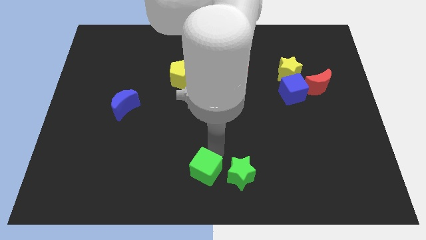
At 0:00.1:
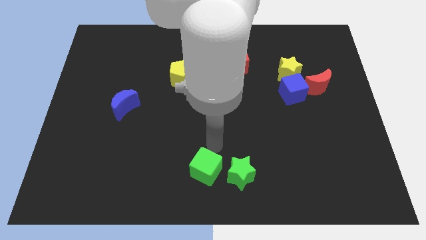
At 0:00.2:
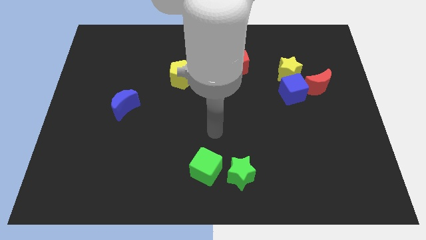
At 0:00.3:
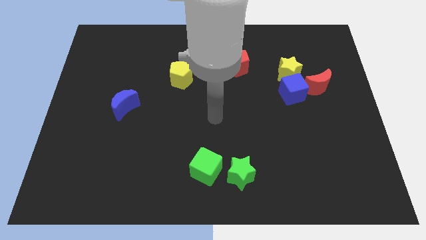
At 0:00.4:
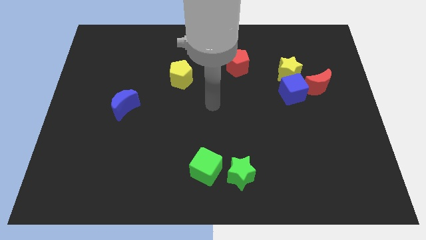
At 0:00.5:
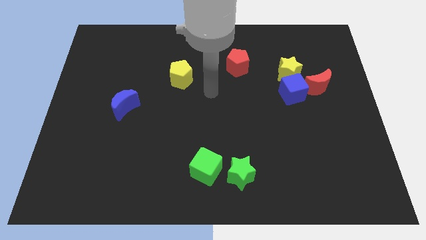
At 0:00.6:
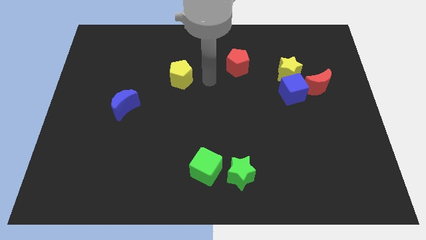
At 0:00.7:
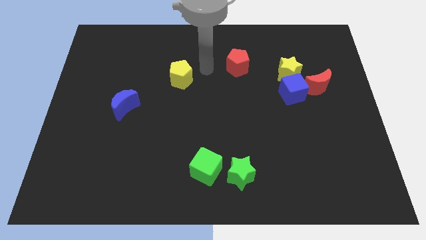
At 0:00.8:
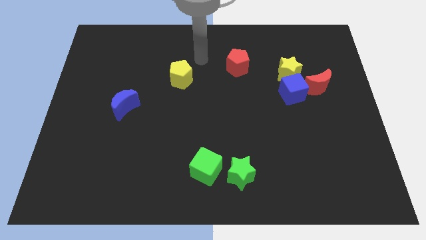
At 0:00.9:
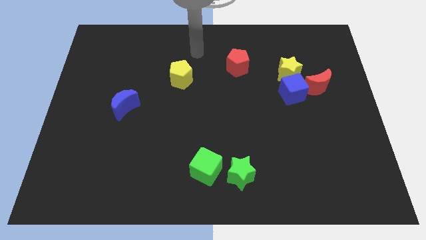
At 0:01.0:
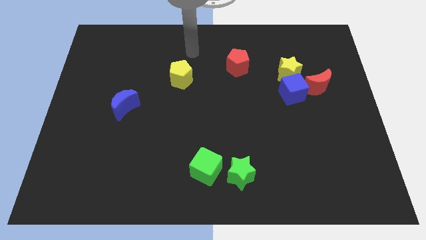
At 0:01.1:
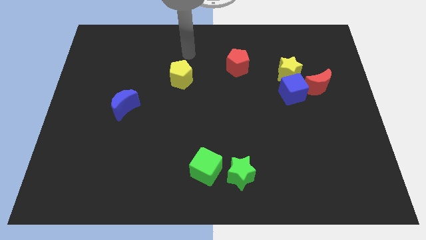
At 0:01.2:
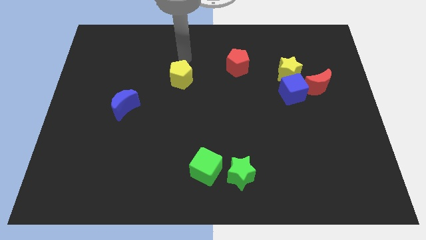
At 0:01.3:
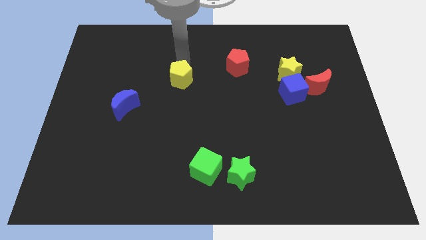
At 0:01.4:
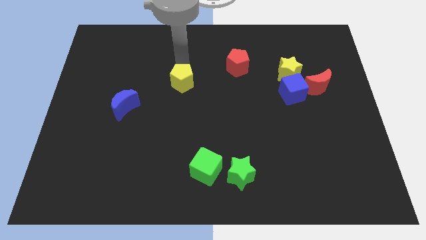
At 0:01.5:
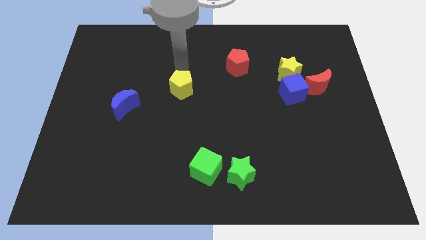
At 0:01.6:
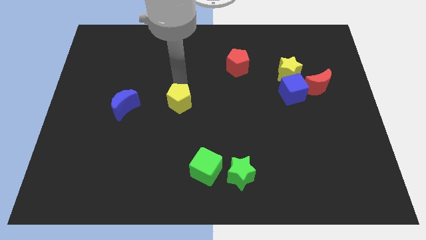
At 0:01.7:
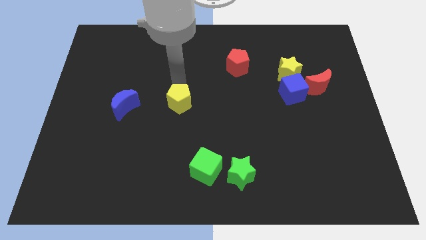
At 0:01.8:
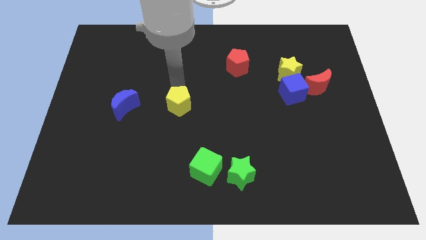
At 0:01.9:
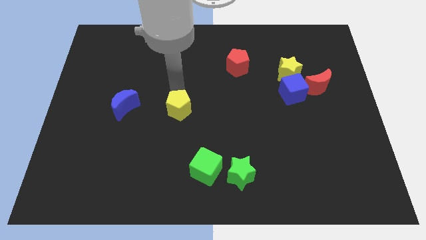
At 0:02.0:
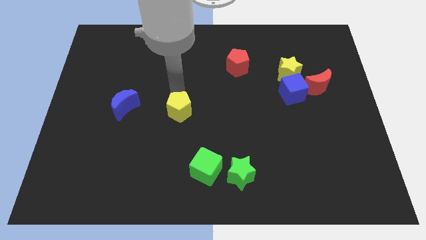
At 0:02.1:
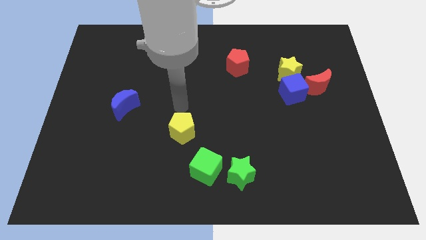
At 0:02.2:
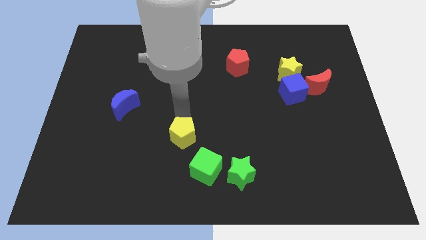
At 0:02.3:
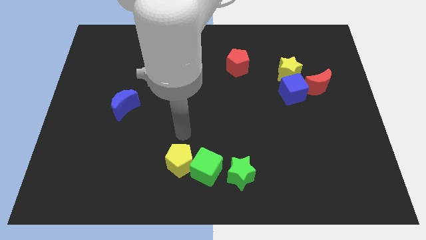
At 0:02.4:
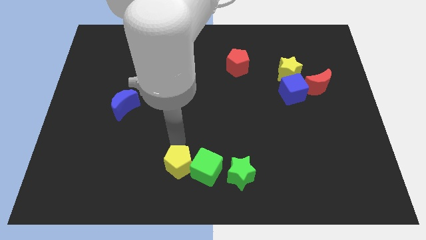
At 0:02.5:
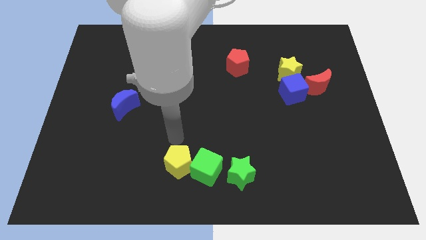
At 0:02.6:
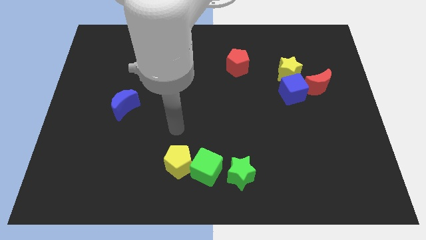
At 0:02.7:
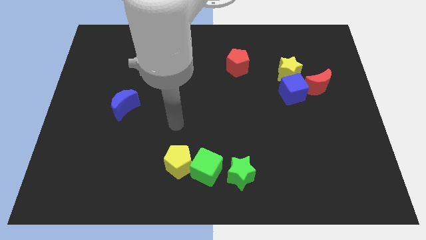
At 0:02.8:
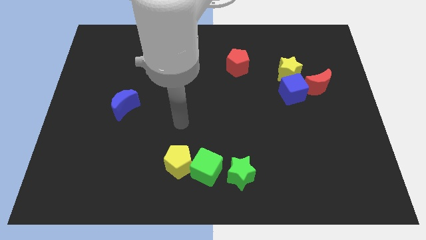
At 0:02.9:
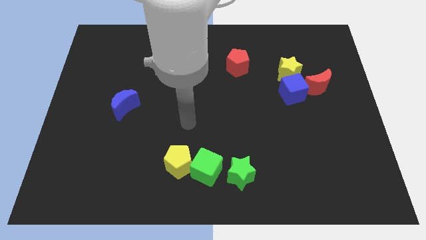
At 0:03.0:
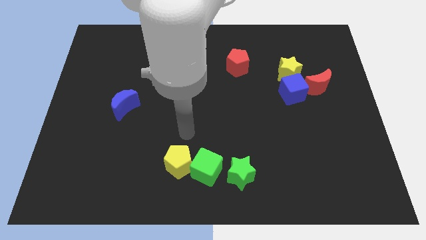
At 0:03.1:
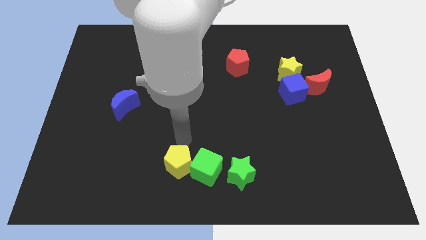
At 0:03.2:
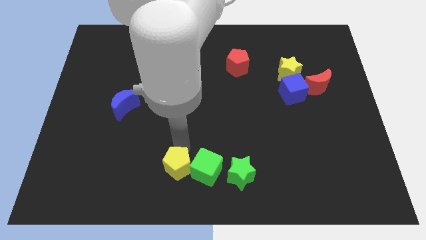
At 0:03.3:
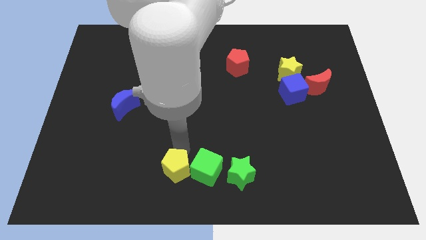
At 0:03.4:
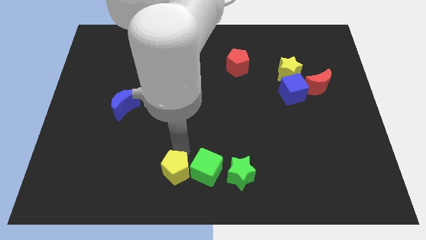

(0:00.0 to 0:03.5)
place the yellow pentagon left to the green cube

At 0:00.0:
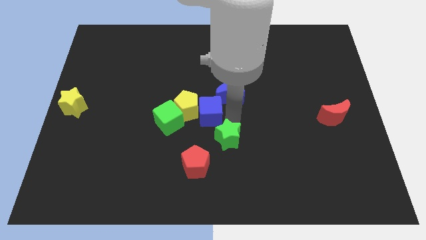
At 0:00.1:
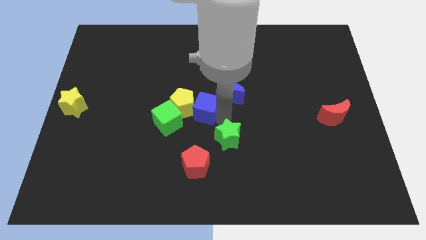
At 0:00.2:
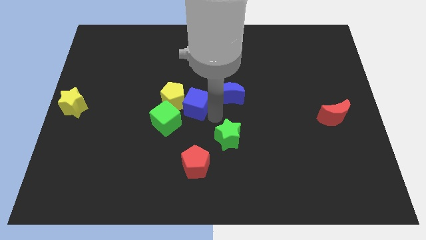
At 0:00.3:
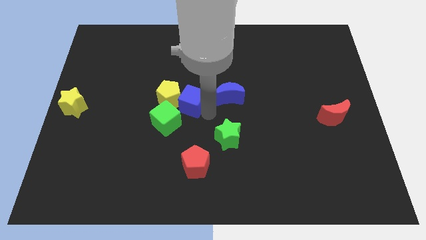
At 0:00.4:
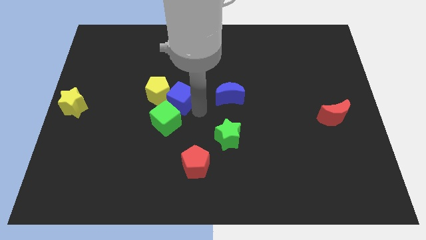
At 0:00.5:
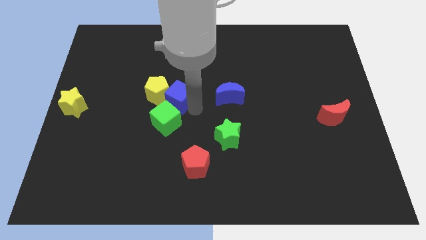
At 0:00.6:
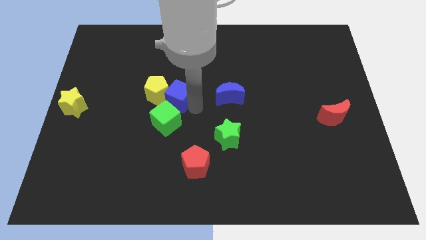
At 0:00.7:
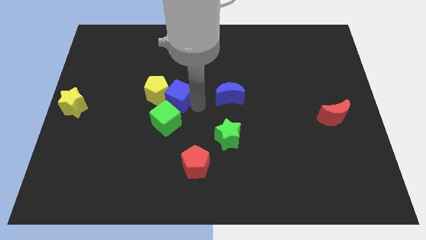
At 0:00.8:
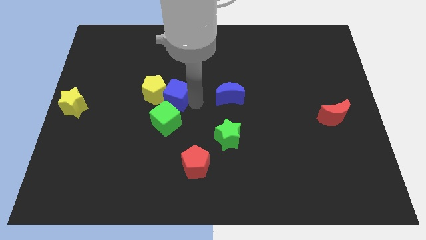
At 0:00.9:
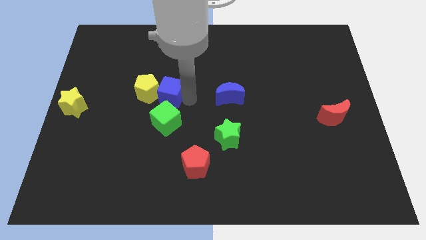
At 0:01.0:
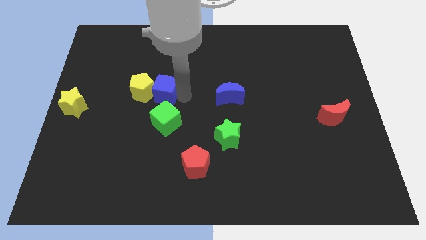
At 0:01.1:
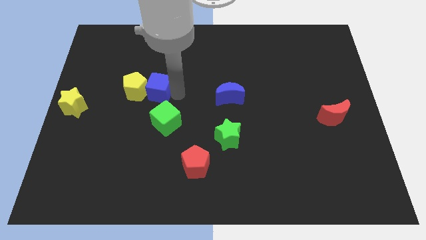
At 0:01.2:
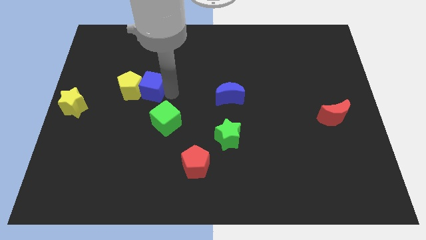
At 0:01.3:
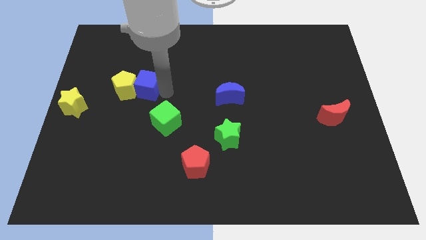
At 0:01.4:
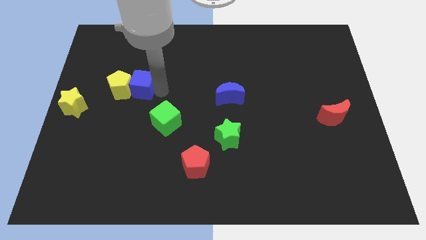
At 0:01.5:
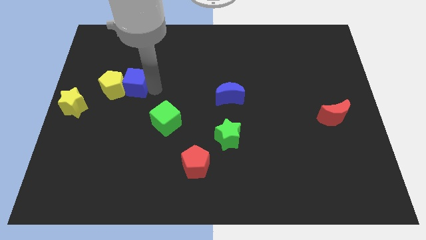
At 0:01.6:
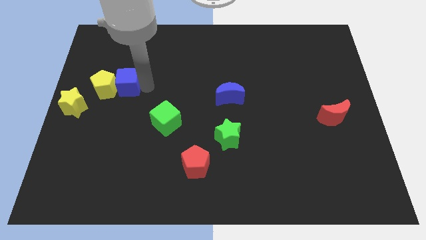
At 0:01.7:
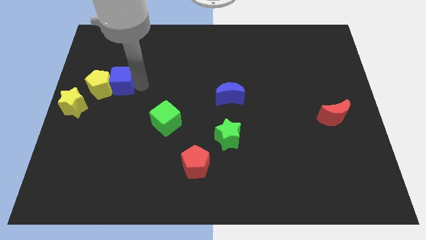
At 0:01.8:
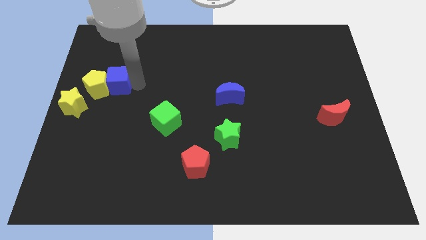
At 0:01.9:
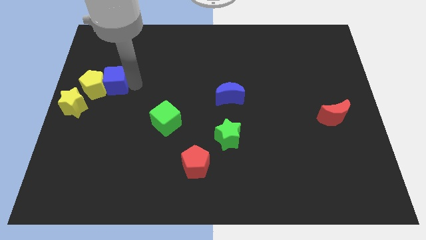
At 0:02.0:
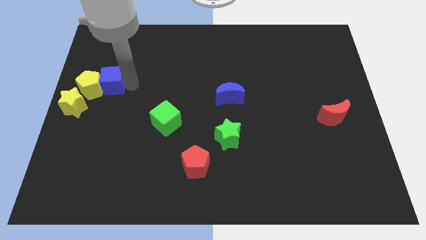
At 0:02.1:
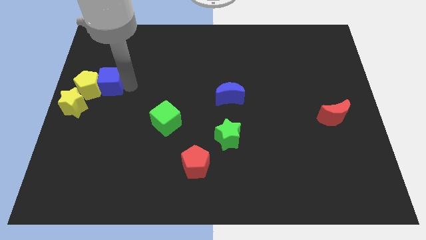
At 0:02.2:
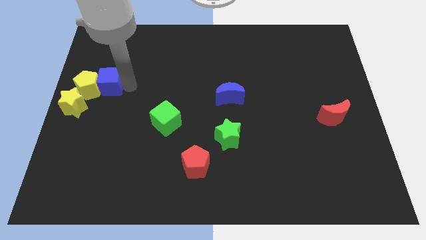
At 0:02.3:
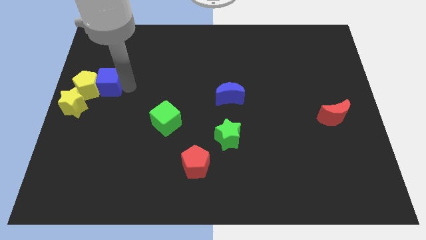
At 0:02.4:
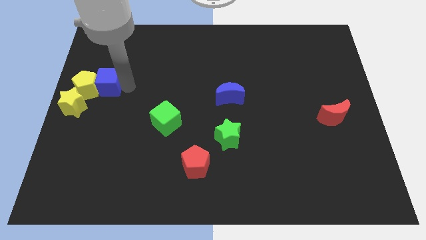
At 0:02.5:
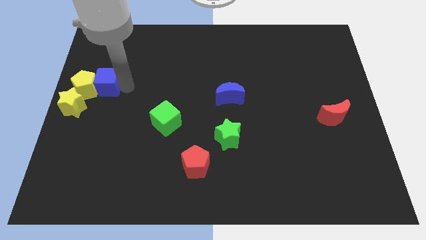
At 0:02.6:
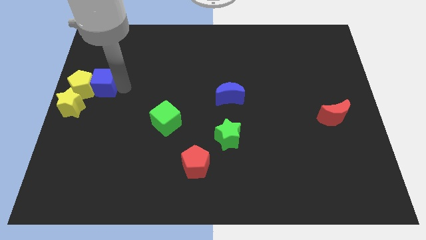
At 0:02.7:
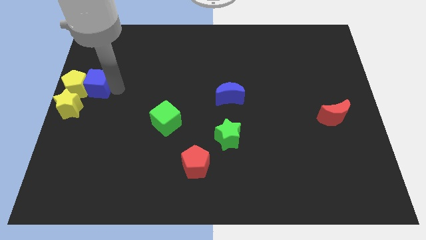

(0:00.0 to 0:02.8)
place the yellow pentagon near yellow star by pushing with blue cube

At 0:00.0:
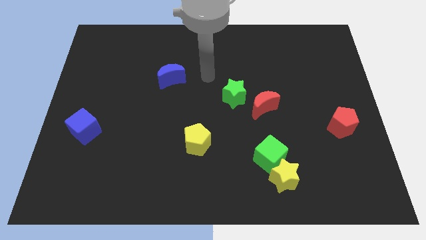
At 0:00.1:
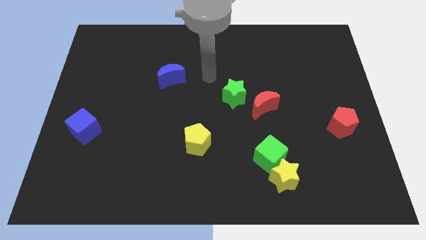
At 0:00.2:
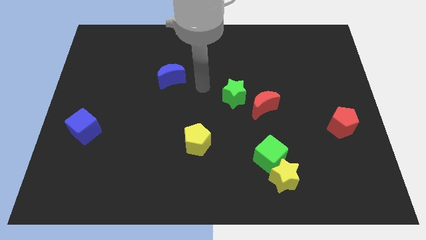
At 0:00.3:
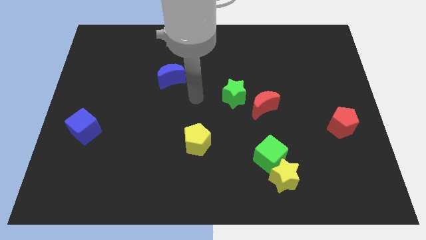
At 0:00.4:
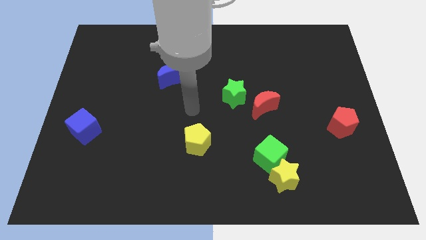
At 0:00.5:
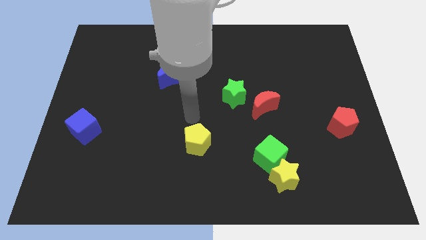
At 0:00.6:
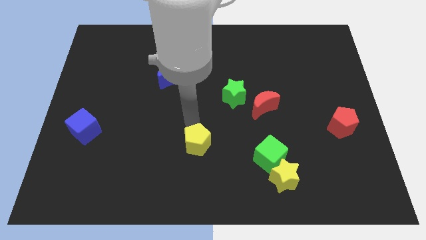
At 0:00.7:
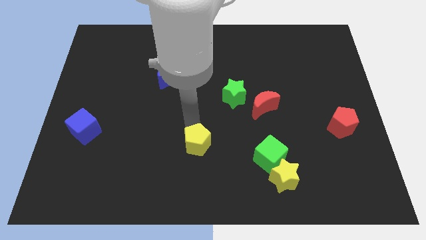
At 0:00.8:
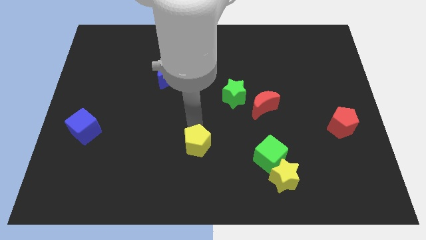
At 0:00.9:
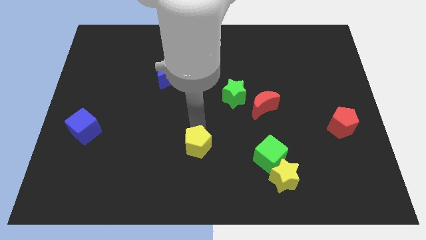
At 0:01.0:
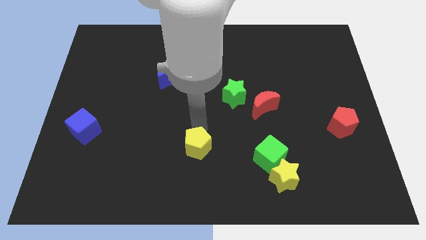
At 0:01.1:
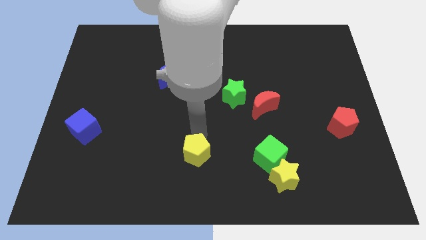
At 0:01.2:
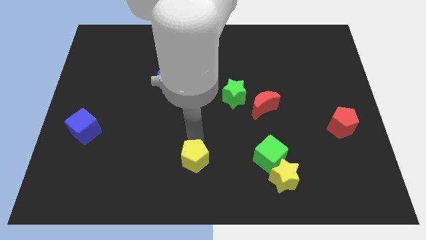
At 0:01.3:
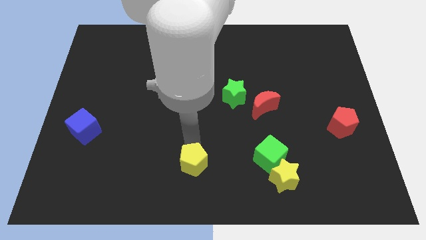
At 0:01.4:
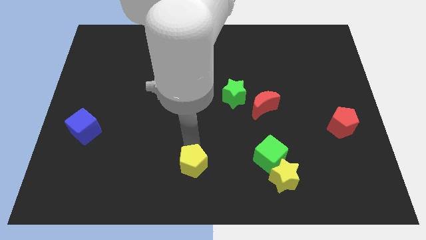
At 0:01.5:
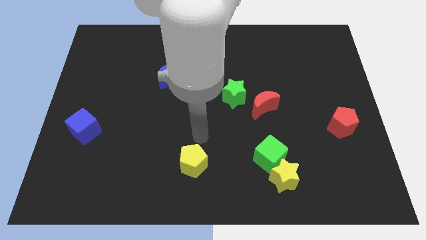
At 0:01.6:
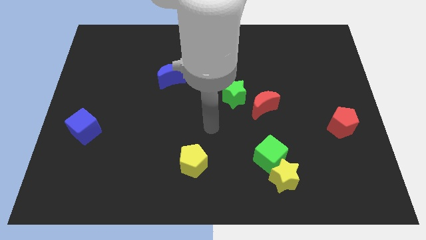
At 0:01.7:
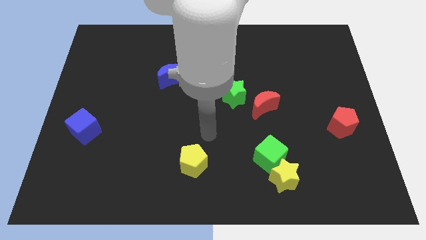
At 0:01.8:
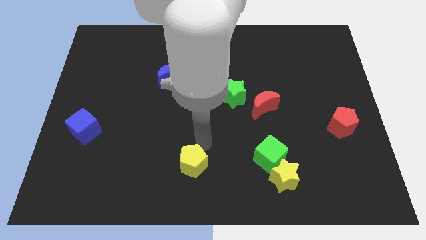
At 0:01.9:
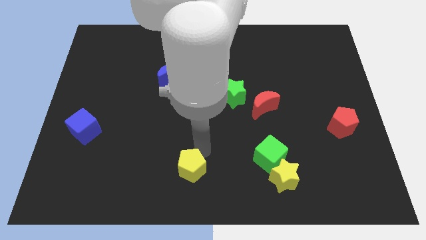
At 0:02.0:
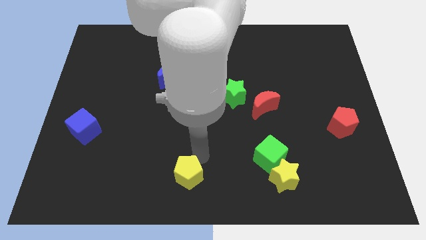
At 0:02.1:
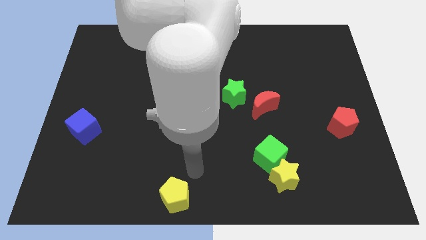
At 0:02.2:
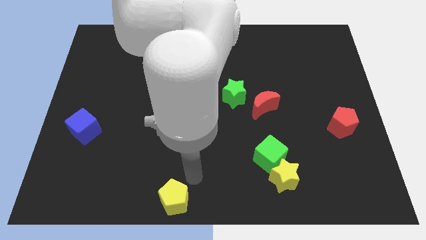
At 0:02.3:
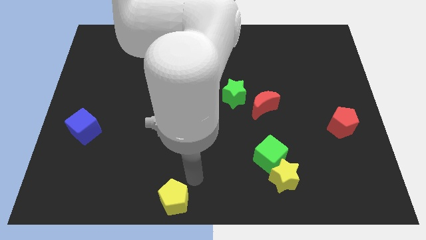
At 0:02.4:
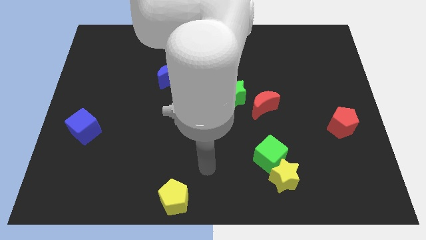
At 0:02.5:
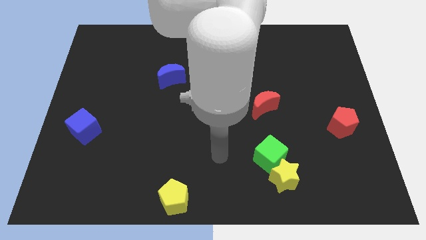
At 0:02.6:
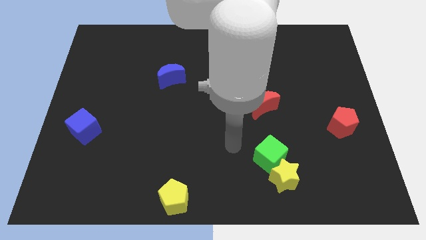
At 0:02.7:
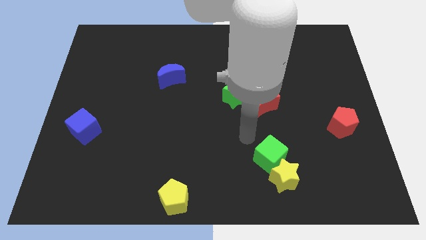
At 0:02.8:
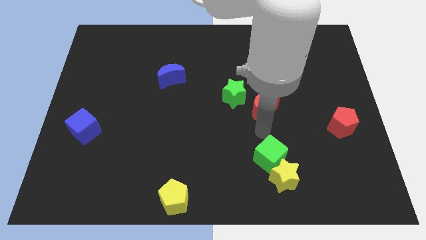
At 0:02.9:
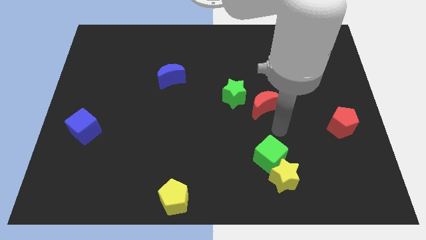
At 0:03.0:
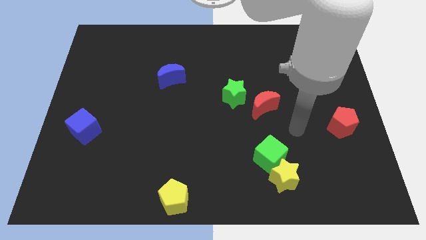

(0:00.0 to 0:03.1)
push the yellow pentagon to the bottom of the board
